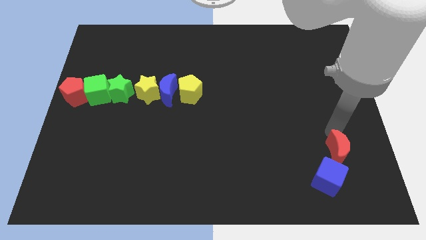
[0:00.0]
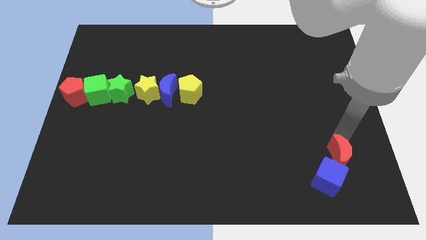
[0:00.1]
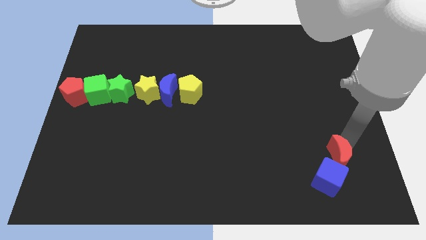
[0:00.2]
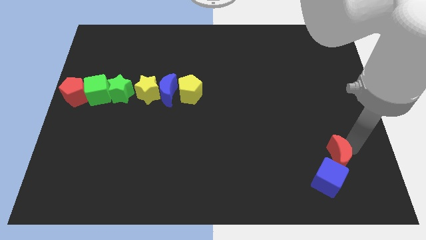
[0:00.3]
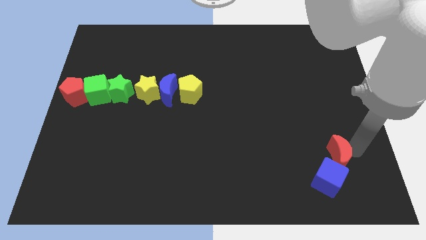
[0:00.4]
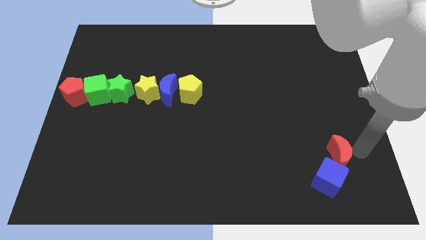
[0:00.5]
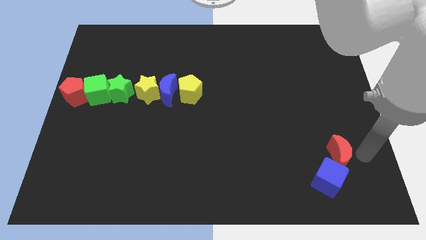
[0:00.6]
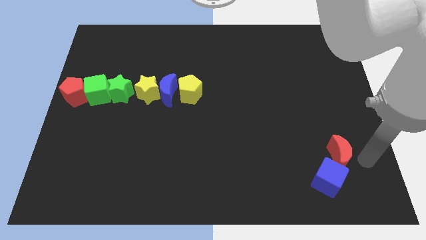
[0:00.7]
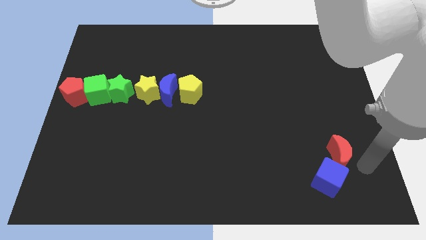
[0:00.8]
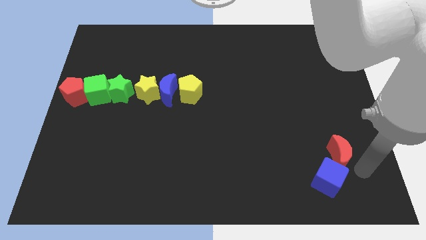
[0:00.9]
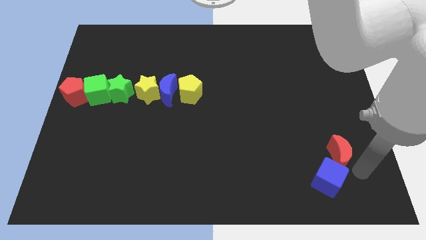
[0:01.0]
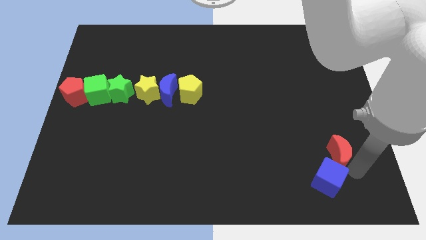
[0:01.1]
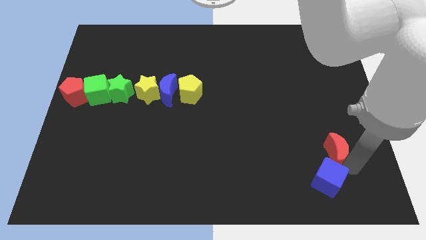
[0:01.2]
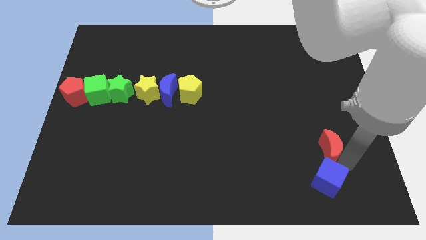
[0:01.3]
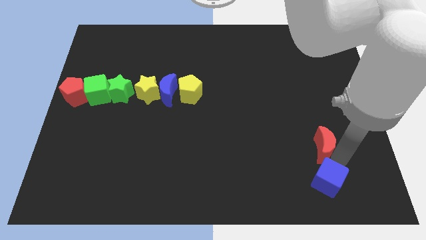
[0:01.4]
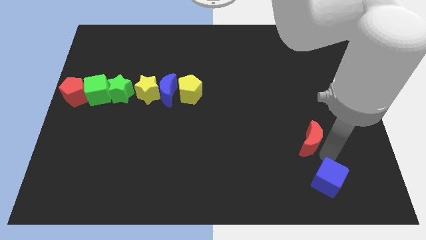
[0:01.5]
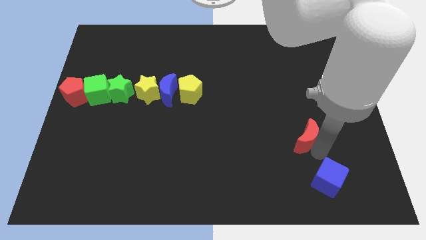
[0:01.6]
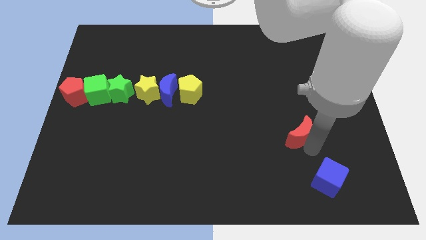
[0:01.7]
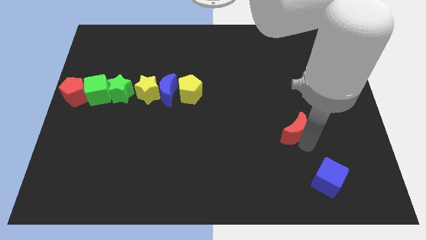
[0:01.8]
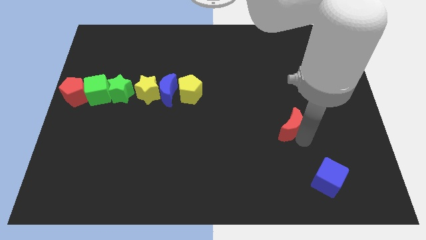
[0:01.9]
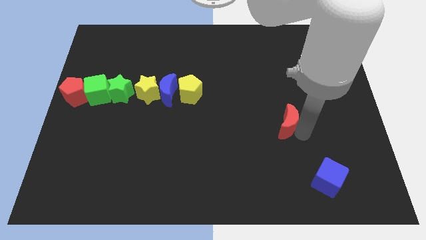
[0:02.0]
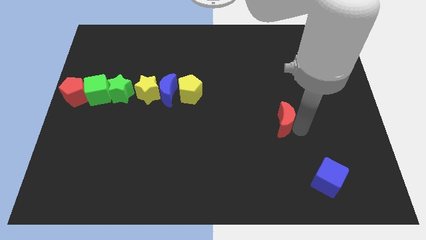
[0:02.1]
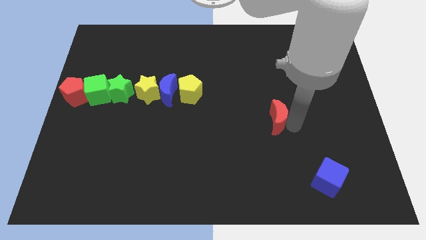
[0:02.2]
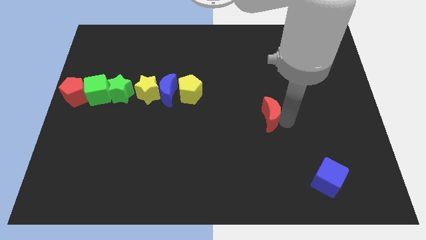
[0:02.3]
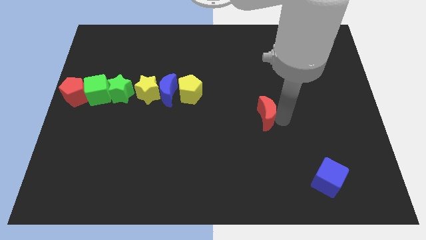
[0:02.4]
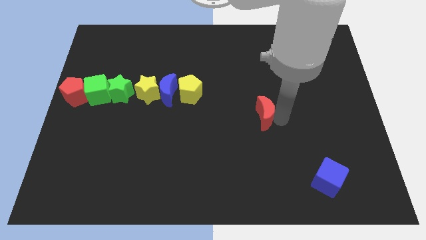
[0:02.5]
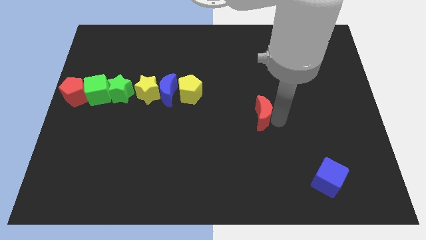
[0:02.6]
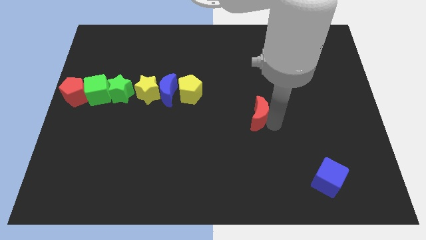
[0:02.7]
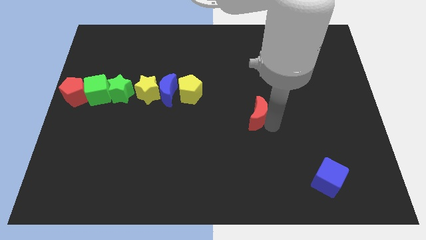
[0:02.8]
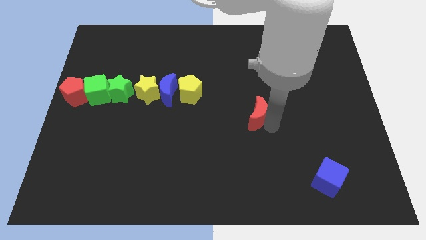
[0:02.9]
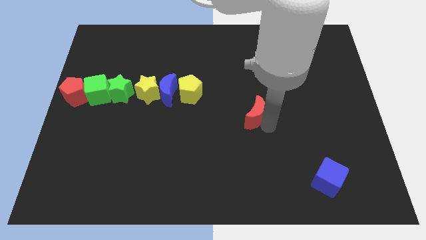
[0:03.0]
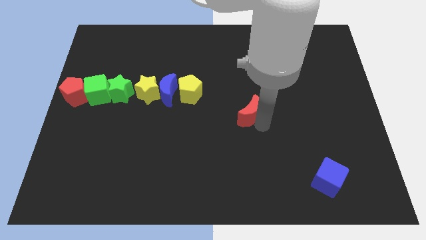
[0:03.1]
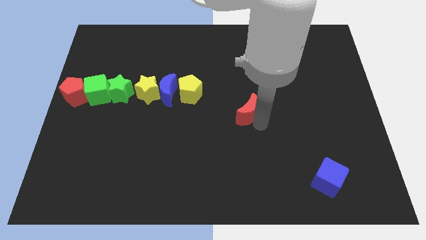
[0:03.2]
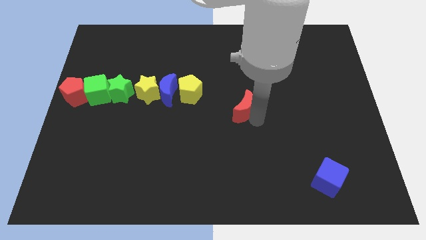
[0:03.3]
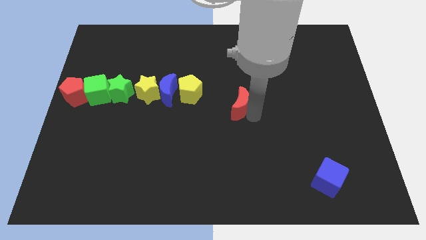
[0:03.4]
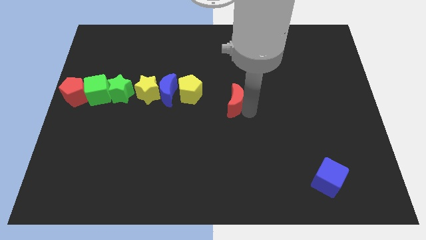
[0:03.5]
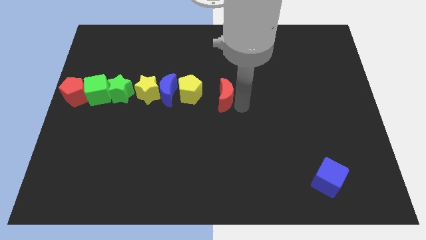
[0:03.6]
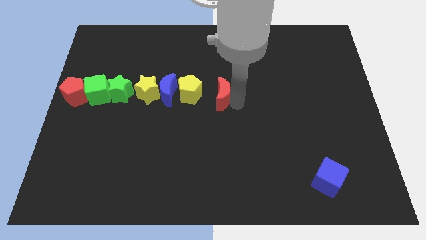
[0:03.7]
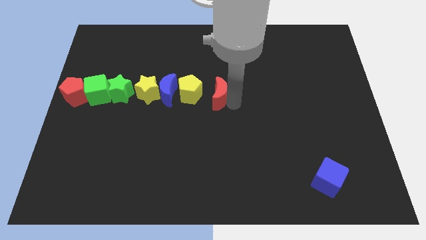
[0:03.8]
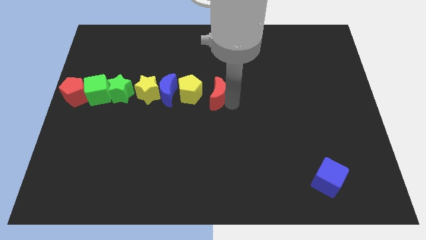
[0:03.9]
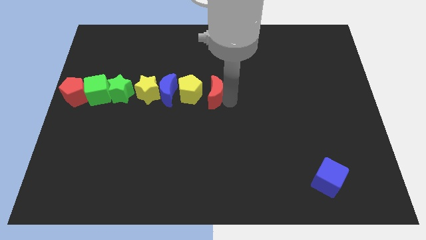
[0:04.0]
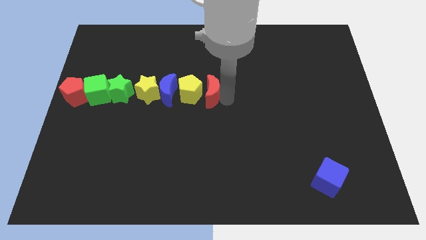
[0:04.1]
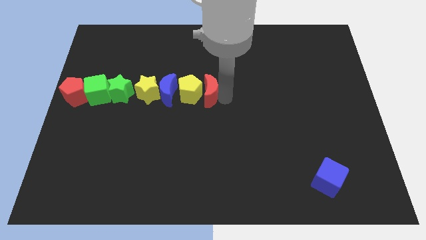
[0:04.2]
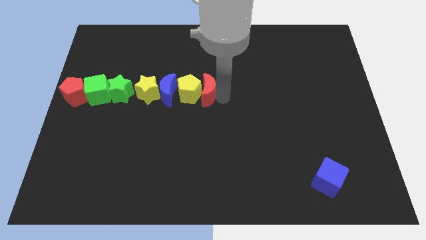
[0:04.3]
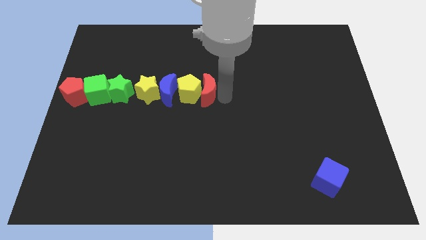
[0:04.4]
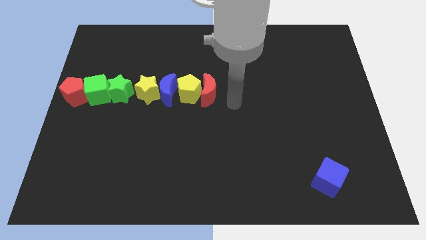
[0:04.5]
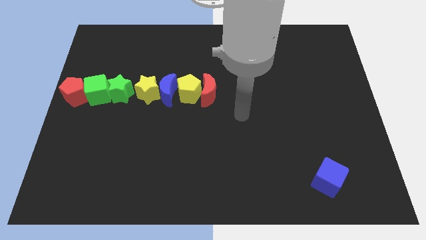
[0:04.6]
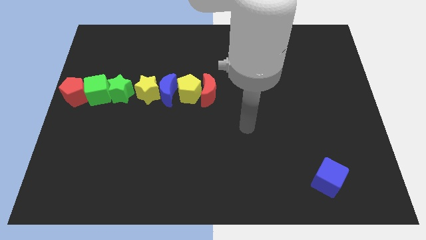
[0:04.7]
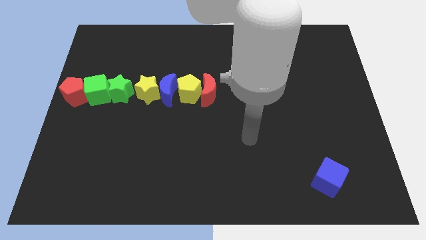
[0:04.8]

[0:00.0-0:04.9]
move the red crescent to the right side of the yellow star

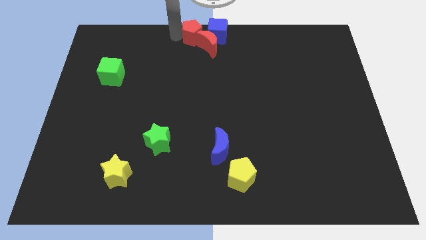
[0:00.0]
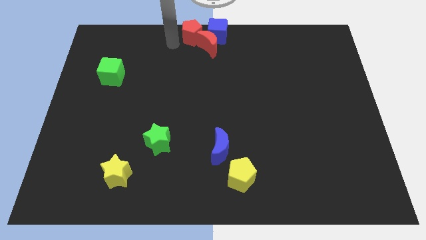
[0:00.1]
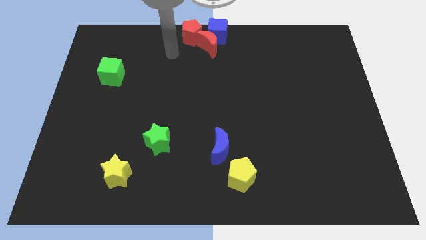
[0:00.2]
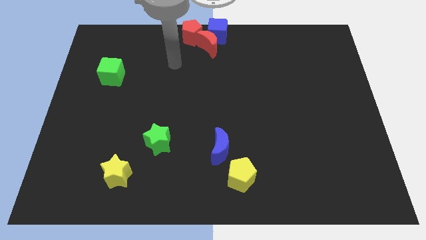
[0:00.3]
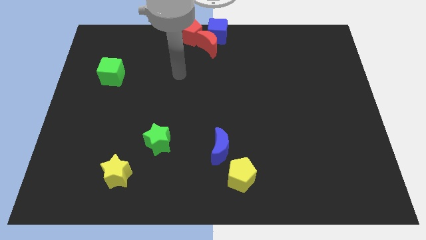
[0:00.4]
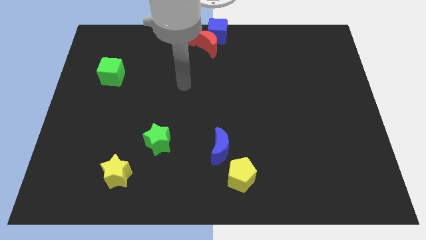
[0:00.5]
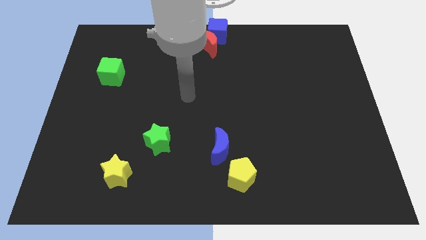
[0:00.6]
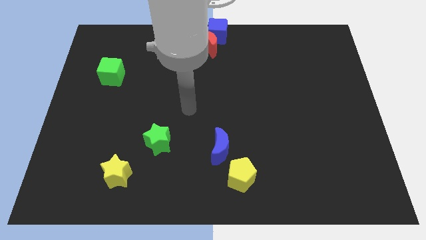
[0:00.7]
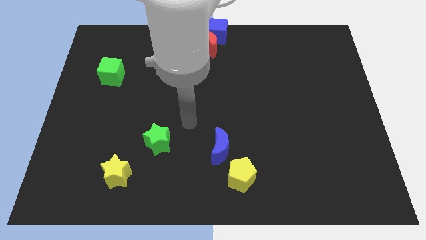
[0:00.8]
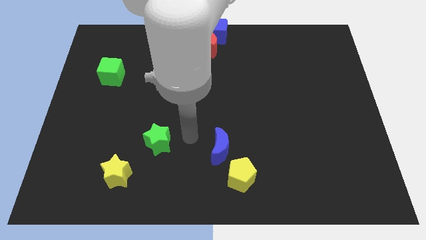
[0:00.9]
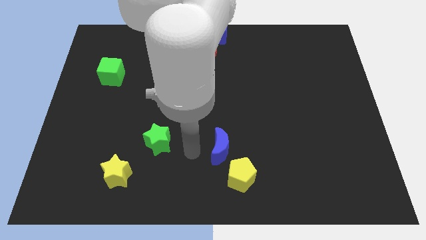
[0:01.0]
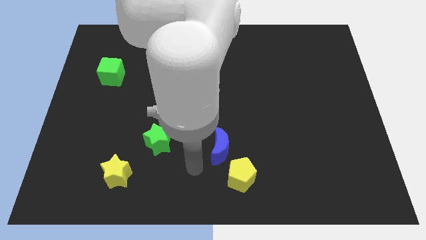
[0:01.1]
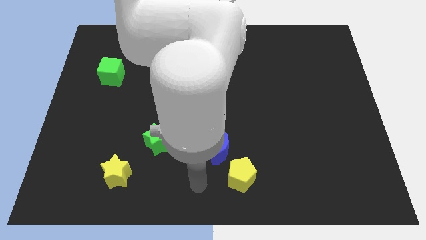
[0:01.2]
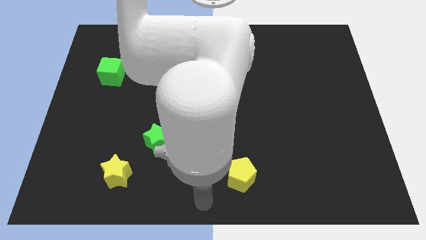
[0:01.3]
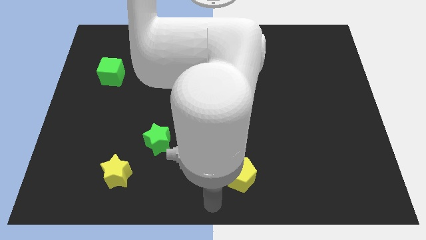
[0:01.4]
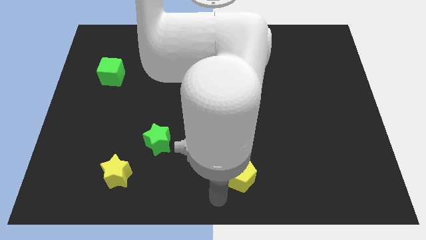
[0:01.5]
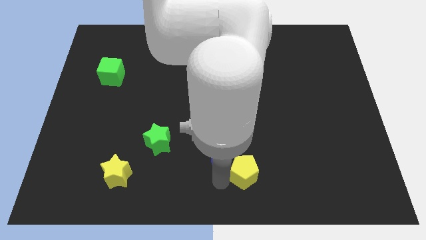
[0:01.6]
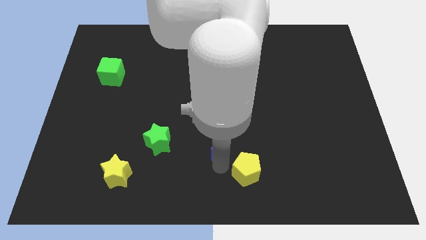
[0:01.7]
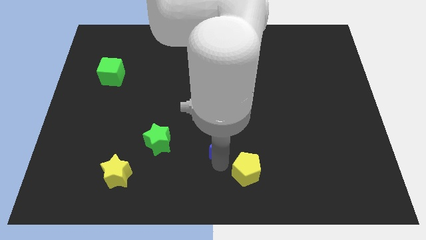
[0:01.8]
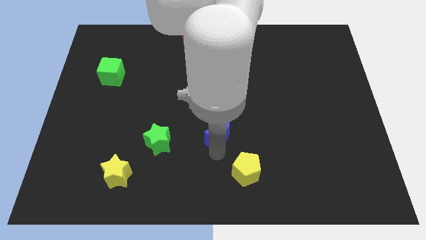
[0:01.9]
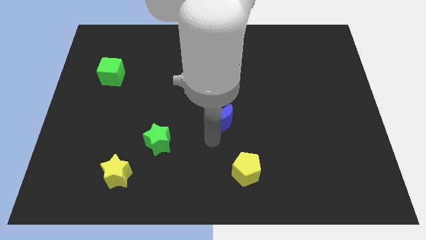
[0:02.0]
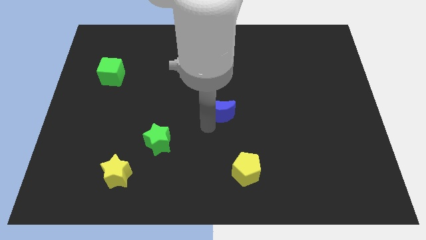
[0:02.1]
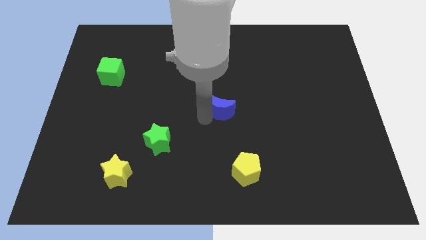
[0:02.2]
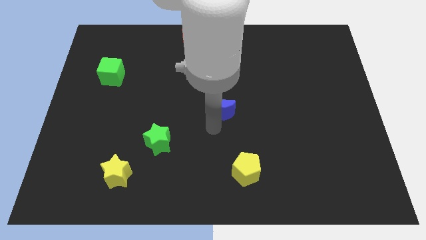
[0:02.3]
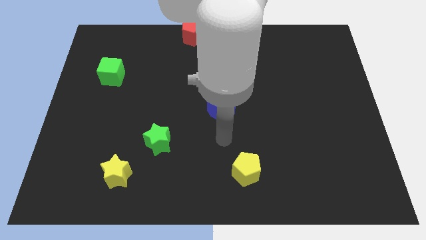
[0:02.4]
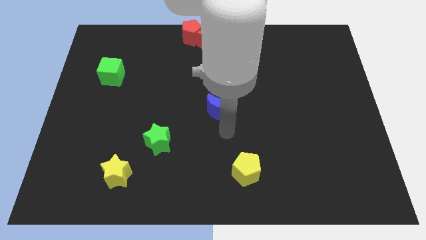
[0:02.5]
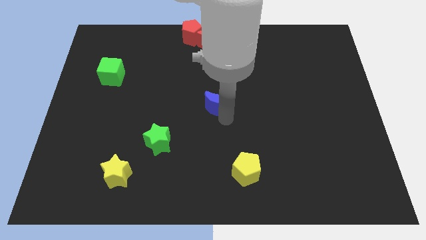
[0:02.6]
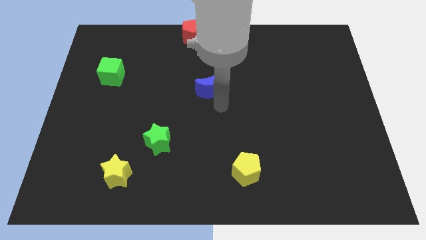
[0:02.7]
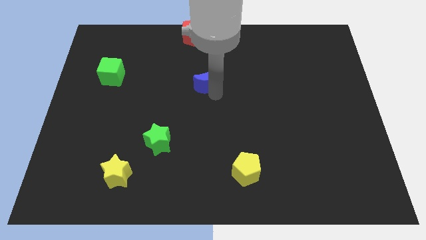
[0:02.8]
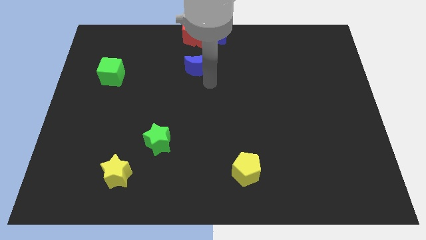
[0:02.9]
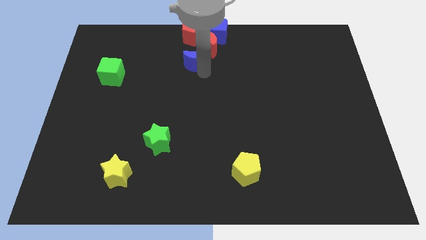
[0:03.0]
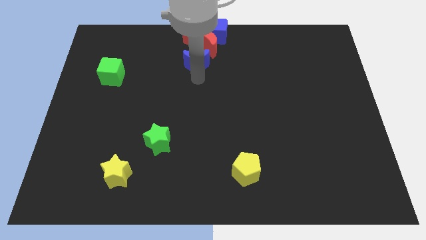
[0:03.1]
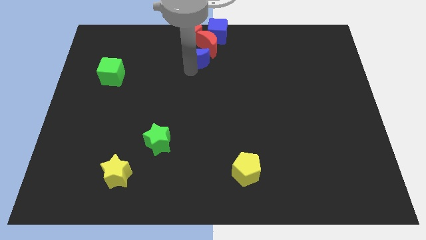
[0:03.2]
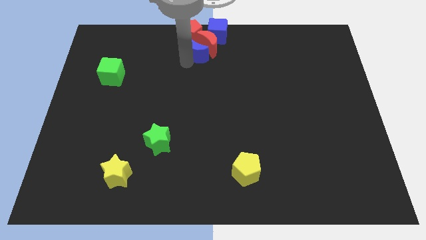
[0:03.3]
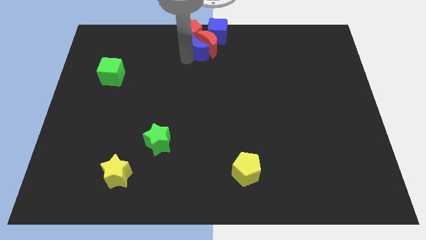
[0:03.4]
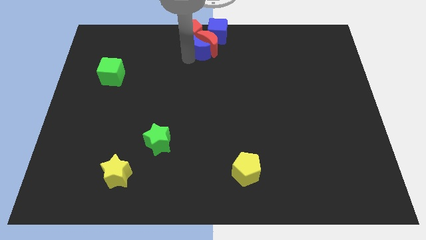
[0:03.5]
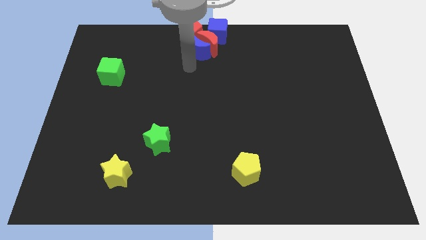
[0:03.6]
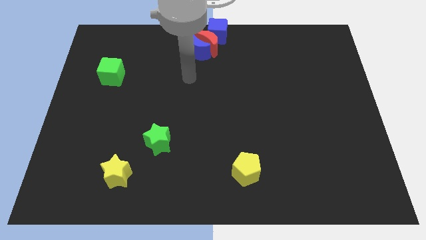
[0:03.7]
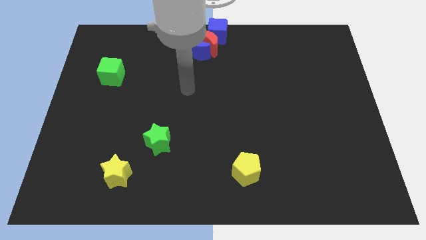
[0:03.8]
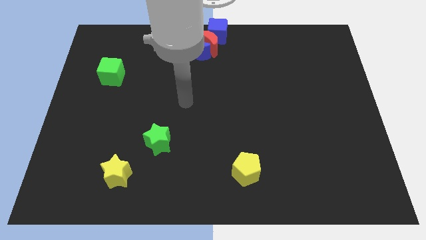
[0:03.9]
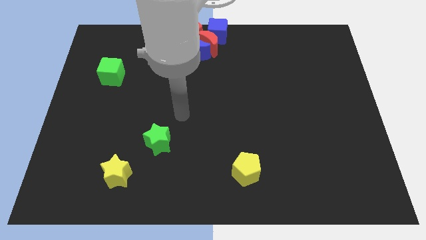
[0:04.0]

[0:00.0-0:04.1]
move your arm away from the red pentagon

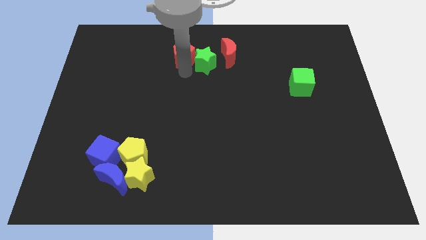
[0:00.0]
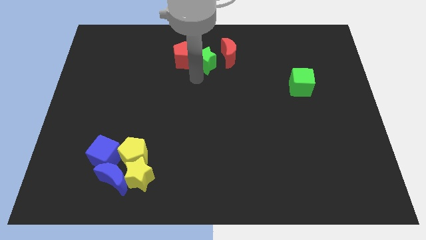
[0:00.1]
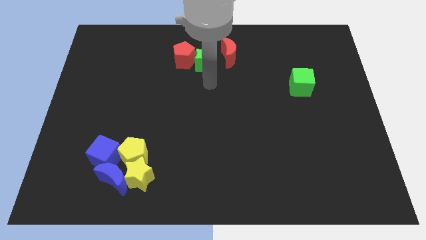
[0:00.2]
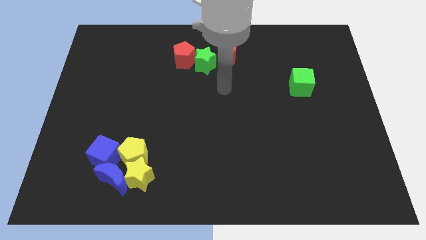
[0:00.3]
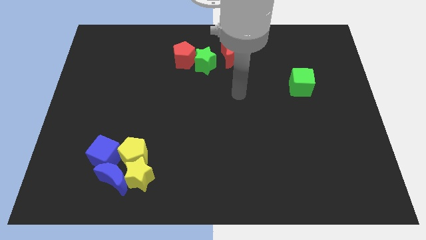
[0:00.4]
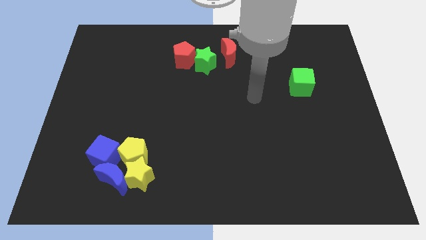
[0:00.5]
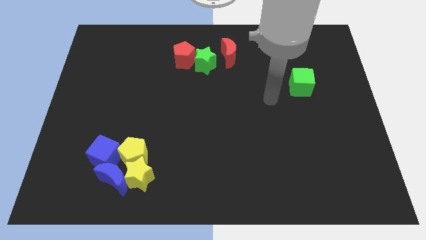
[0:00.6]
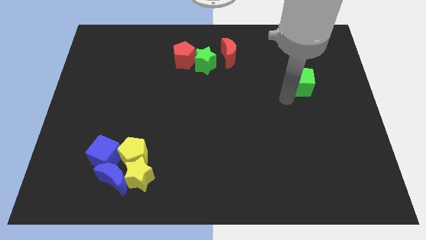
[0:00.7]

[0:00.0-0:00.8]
move your arm away from red pentagon
